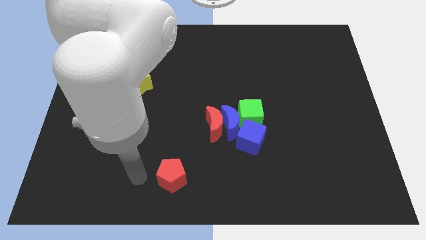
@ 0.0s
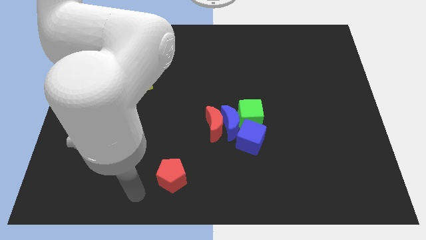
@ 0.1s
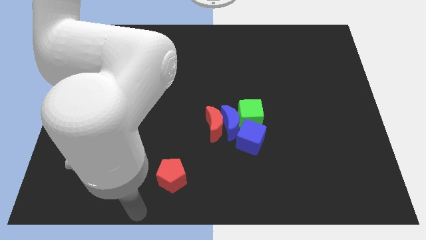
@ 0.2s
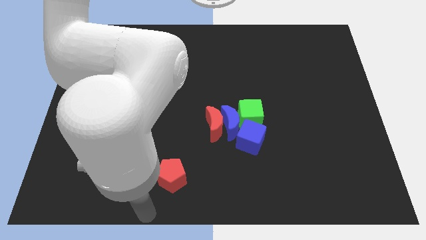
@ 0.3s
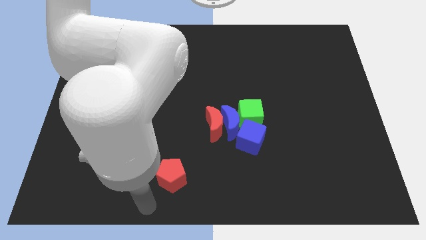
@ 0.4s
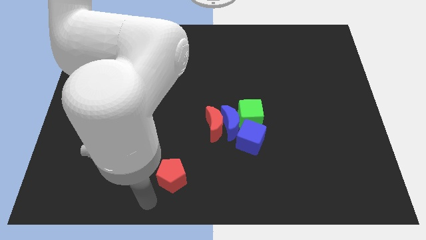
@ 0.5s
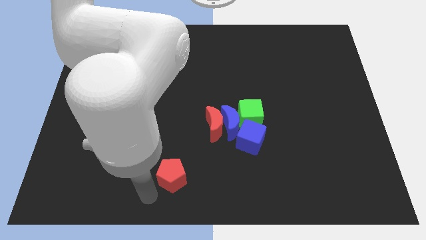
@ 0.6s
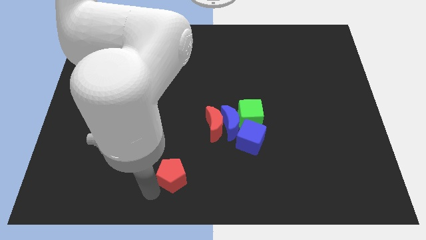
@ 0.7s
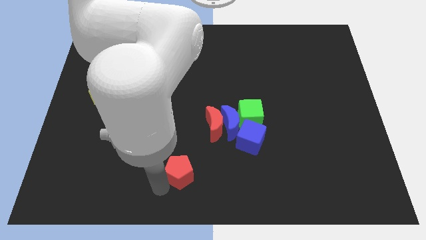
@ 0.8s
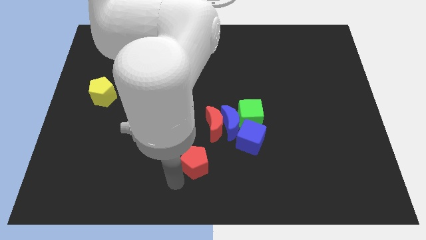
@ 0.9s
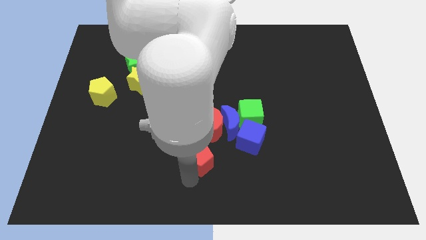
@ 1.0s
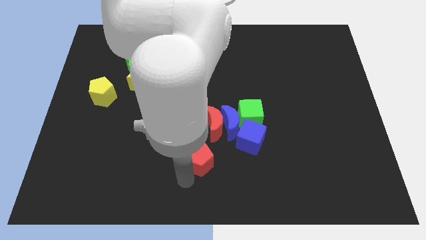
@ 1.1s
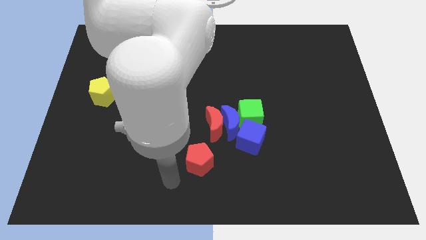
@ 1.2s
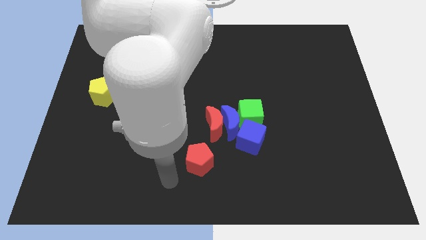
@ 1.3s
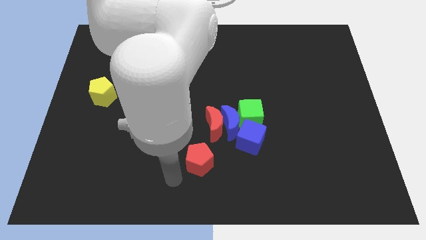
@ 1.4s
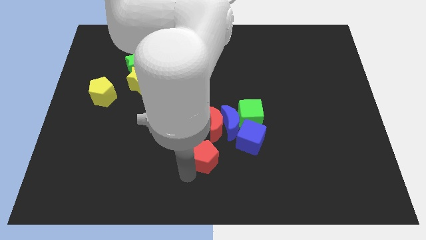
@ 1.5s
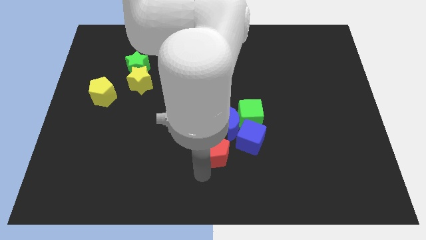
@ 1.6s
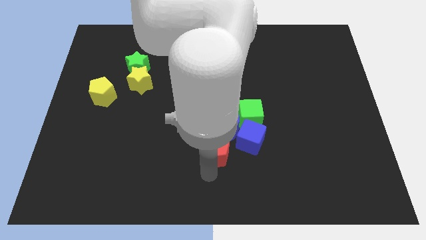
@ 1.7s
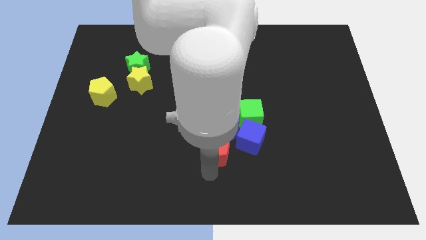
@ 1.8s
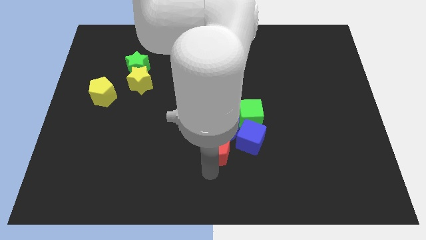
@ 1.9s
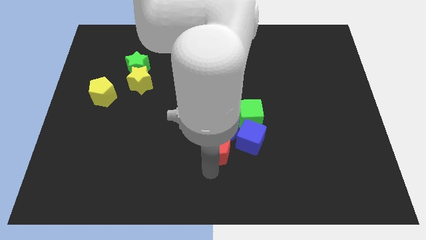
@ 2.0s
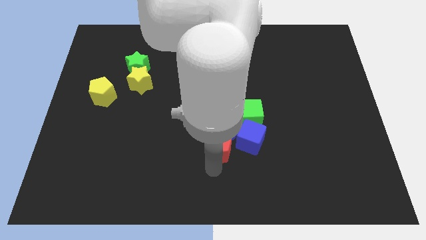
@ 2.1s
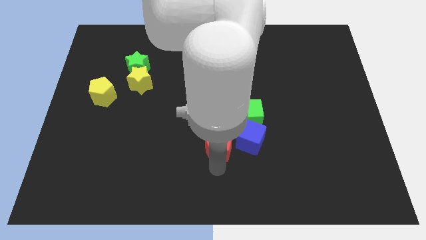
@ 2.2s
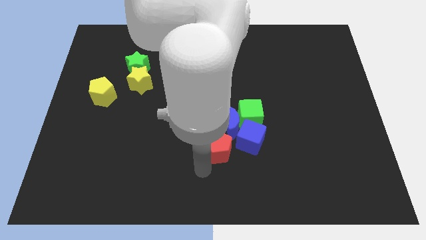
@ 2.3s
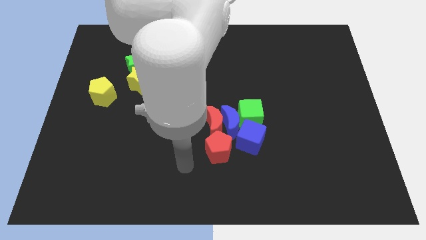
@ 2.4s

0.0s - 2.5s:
place the red pentagon below the red moon

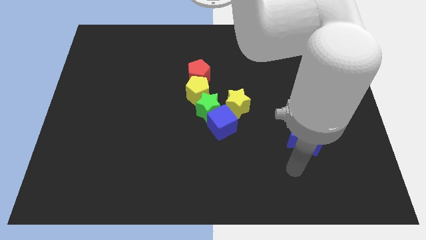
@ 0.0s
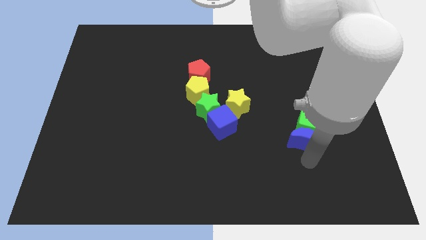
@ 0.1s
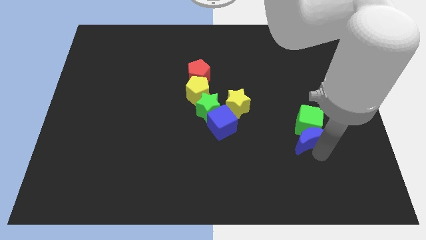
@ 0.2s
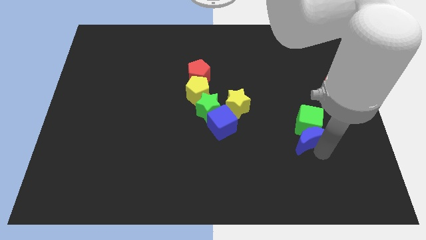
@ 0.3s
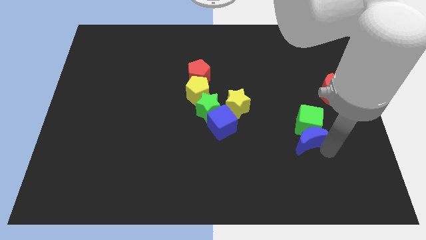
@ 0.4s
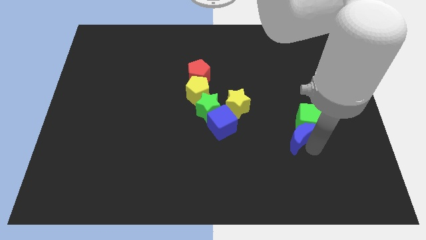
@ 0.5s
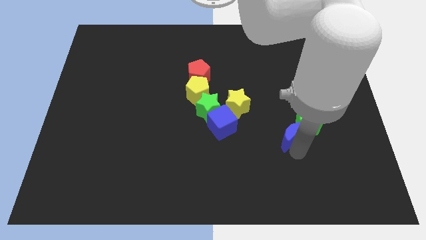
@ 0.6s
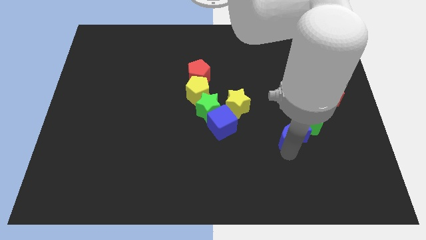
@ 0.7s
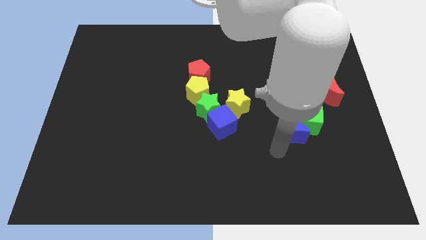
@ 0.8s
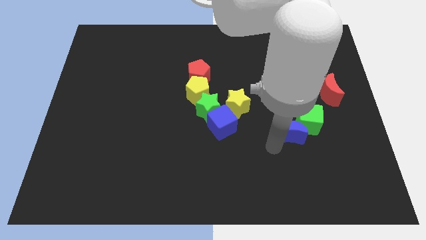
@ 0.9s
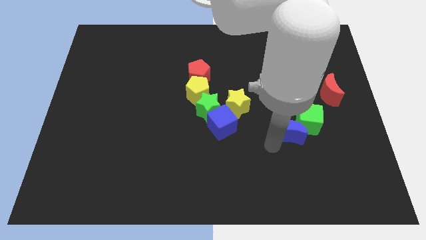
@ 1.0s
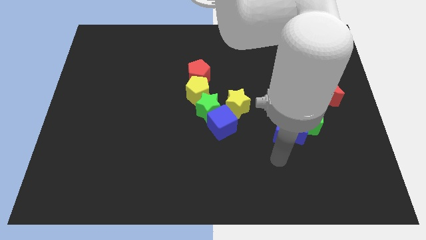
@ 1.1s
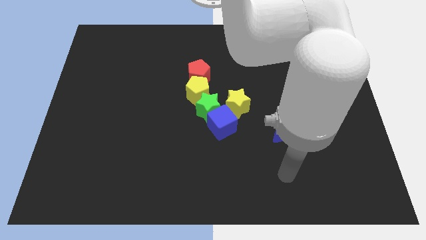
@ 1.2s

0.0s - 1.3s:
slightly move the blue crescent to the left

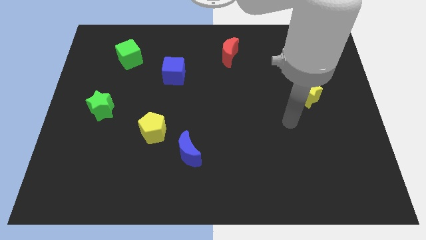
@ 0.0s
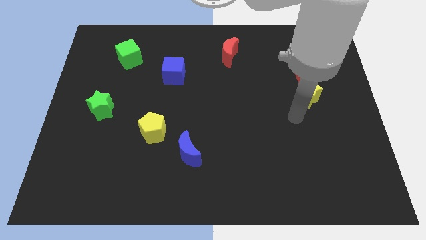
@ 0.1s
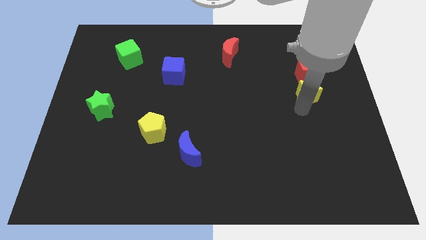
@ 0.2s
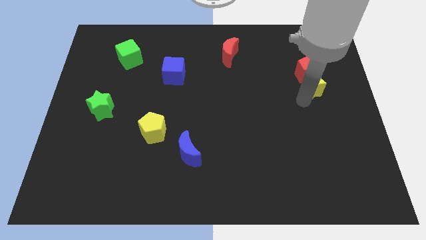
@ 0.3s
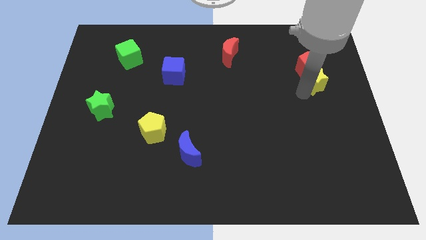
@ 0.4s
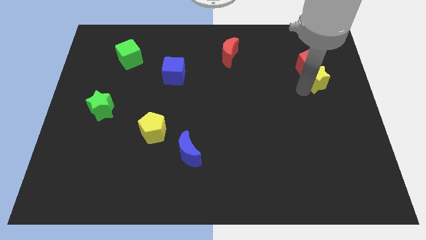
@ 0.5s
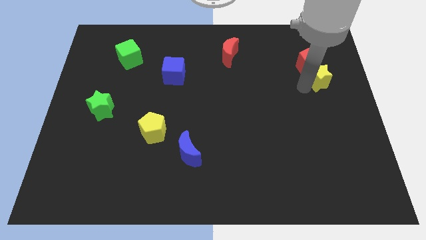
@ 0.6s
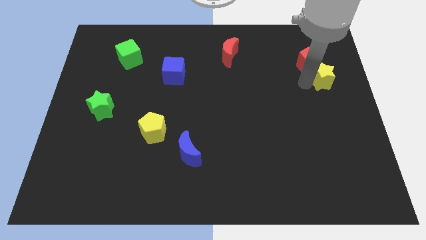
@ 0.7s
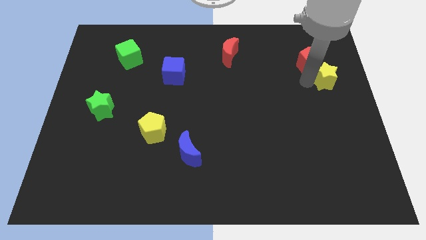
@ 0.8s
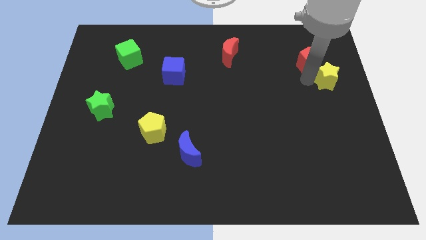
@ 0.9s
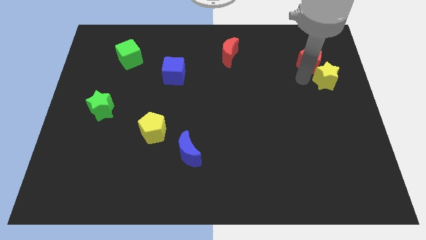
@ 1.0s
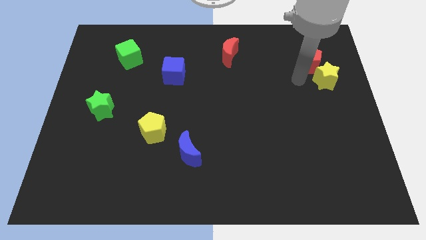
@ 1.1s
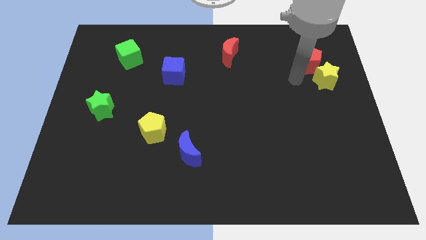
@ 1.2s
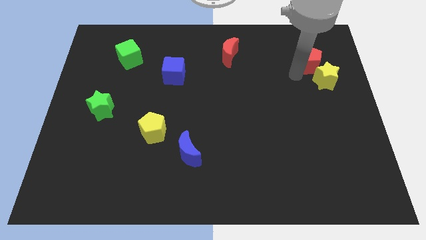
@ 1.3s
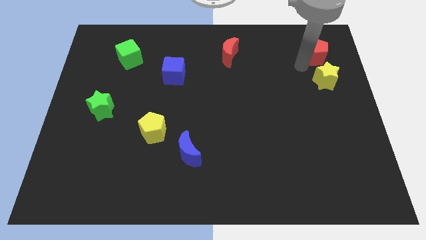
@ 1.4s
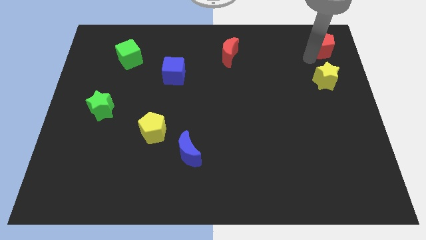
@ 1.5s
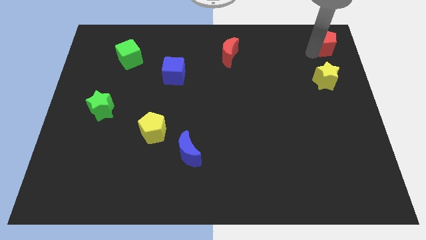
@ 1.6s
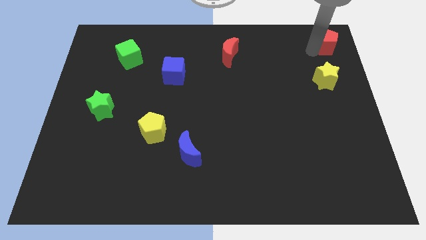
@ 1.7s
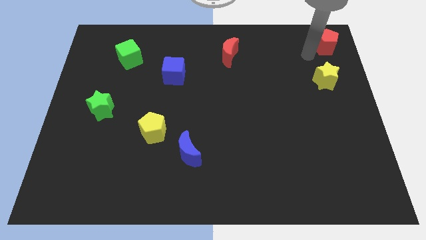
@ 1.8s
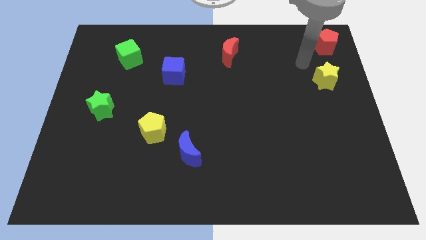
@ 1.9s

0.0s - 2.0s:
separate red pentagon from the yellow star

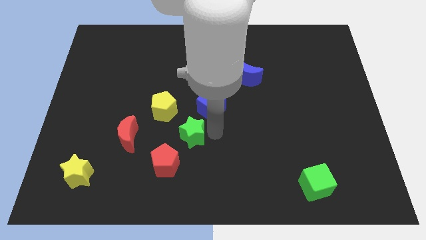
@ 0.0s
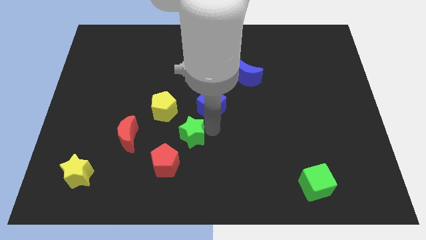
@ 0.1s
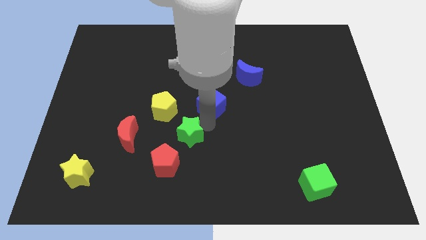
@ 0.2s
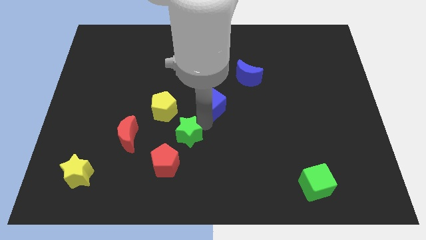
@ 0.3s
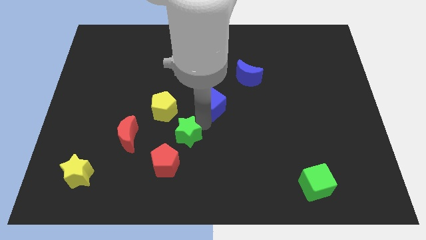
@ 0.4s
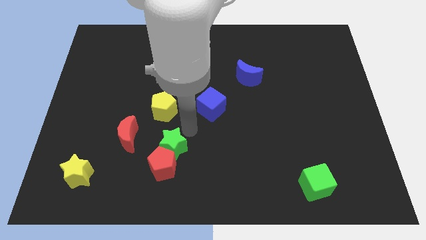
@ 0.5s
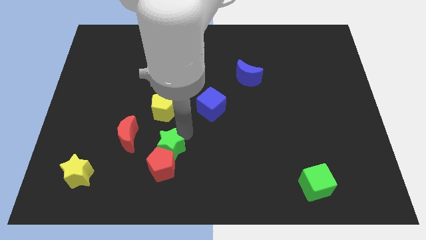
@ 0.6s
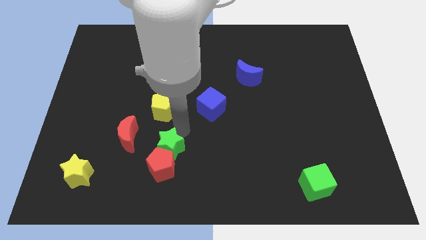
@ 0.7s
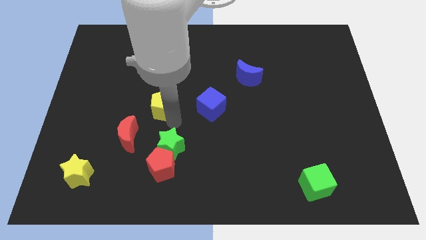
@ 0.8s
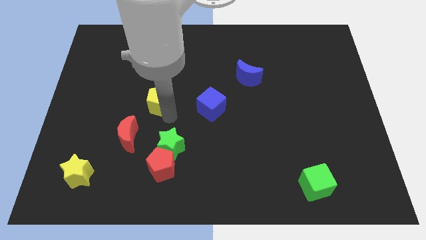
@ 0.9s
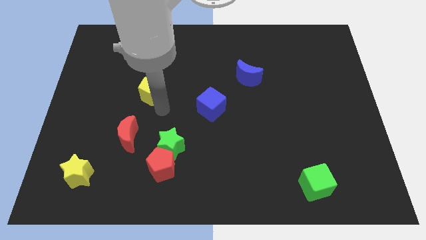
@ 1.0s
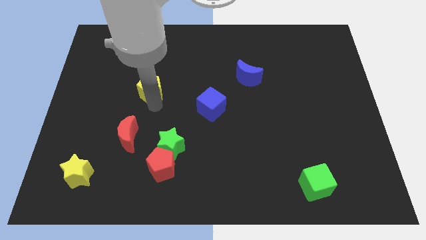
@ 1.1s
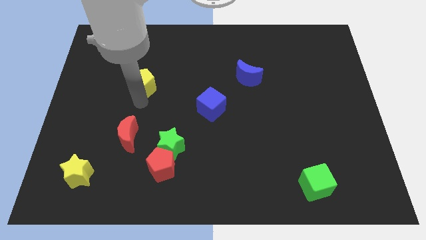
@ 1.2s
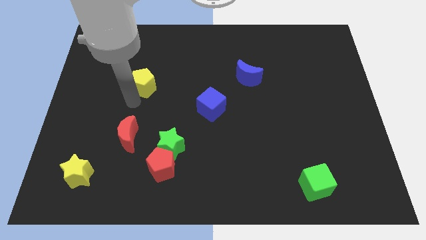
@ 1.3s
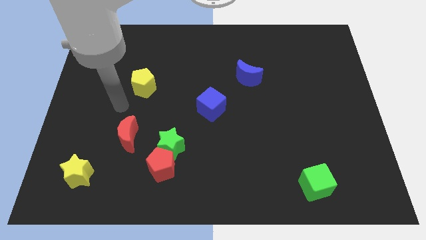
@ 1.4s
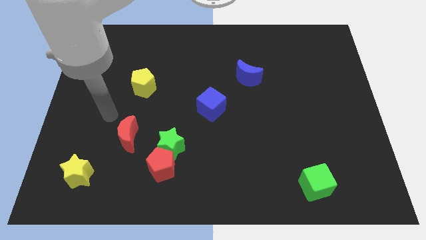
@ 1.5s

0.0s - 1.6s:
place the yellow pentagon above red moon

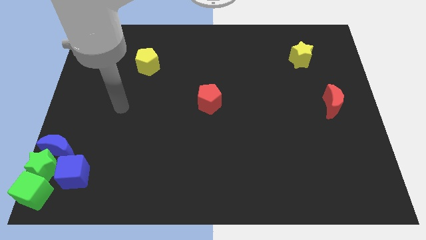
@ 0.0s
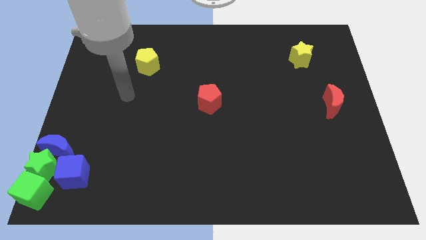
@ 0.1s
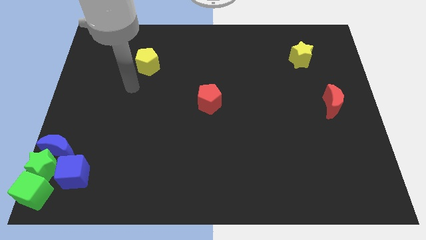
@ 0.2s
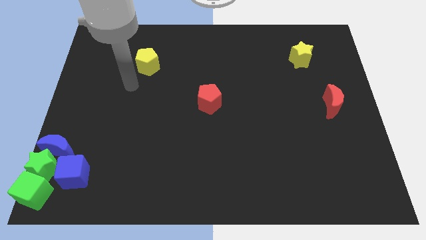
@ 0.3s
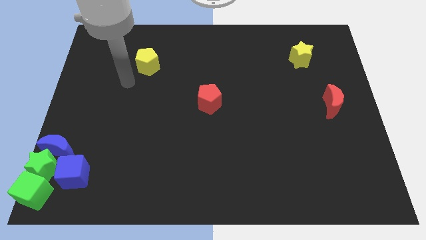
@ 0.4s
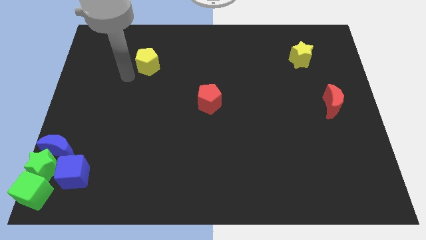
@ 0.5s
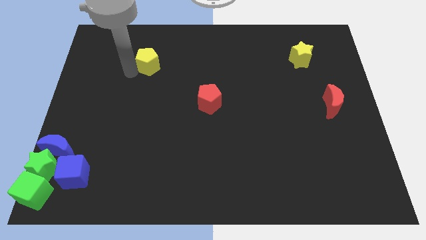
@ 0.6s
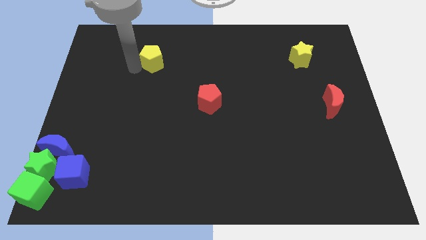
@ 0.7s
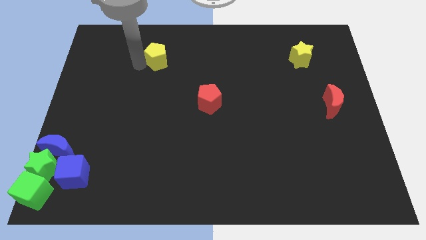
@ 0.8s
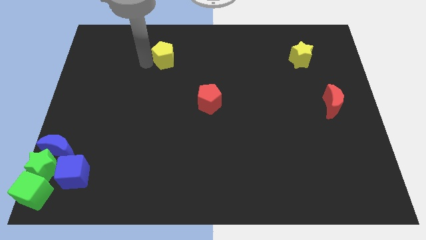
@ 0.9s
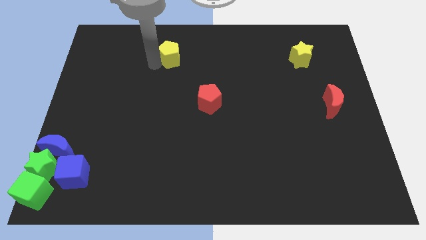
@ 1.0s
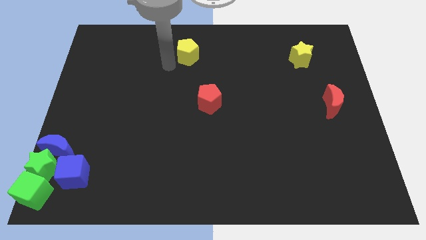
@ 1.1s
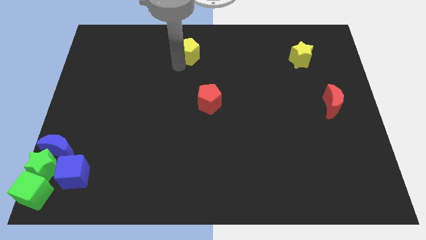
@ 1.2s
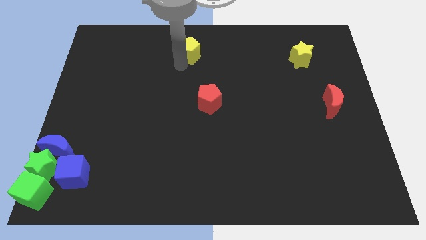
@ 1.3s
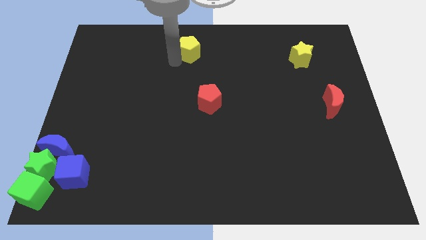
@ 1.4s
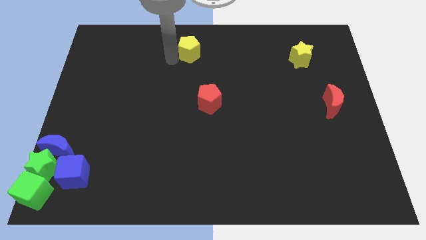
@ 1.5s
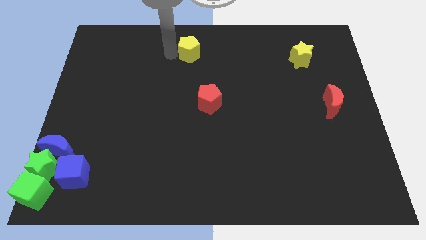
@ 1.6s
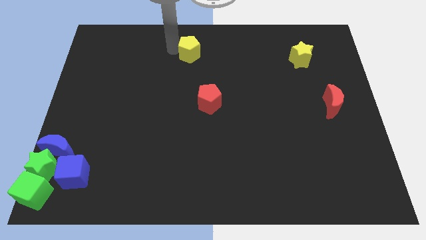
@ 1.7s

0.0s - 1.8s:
push the yellow pentagon to the right of the board
